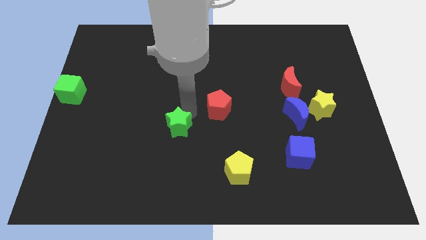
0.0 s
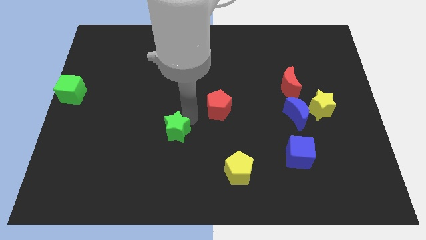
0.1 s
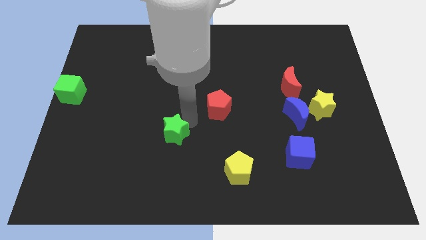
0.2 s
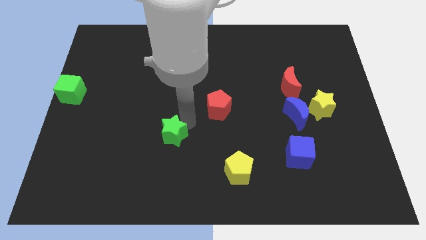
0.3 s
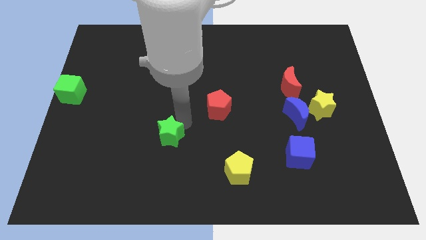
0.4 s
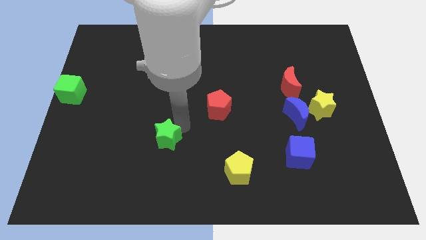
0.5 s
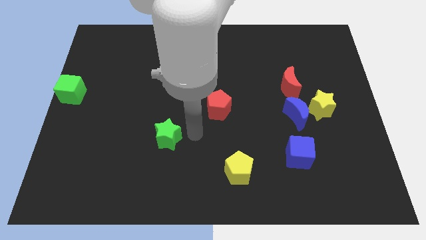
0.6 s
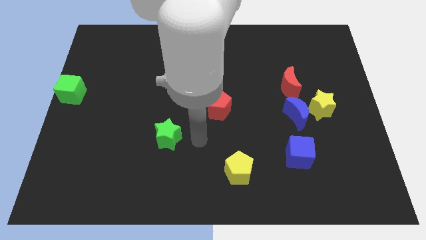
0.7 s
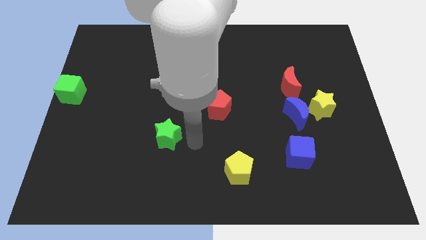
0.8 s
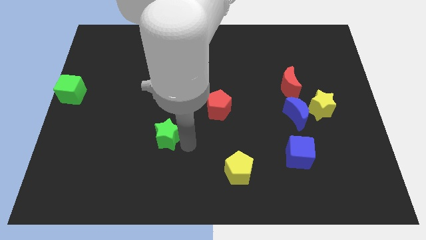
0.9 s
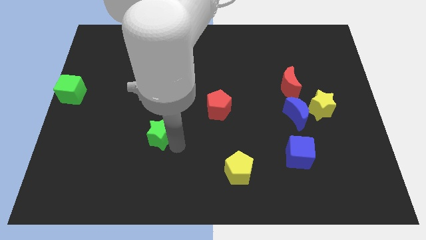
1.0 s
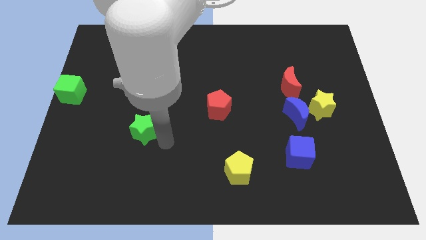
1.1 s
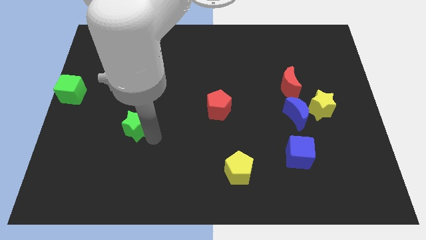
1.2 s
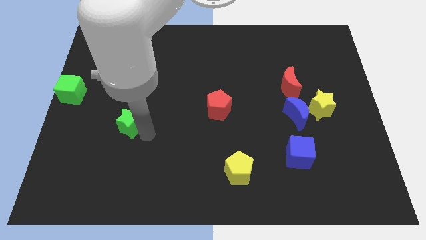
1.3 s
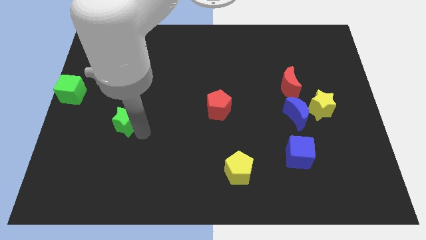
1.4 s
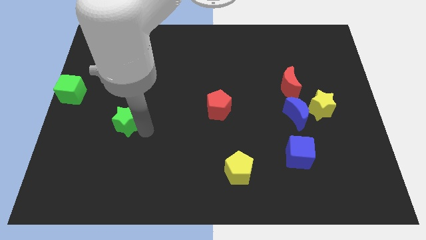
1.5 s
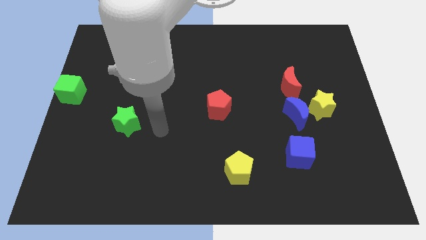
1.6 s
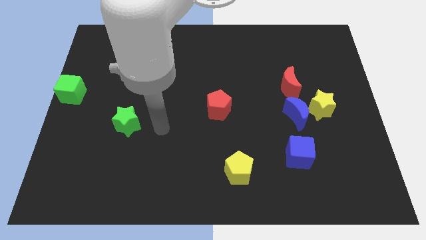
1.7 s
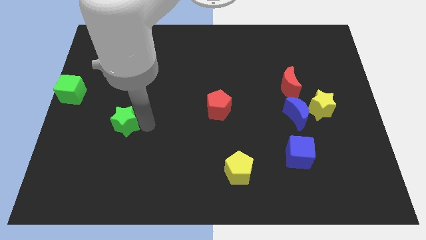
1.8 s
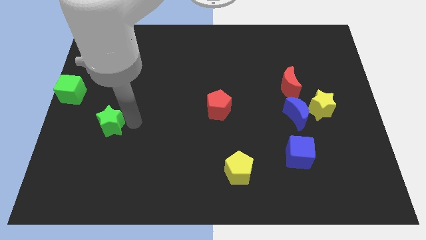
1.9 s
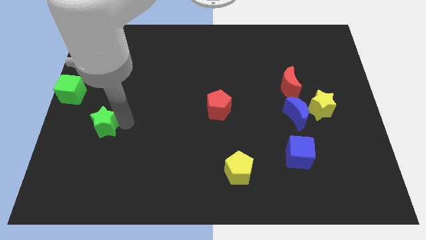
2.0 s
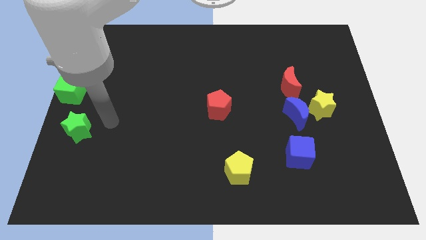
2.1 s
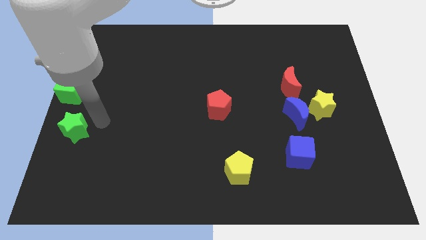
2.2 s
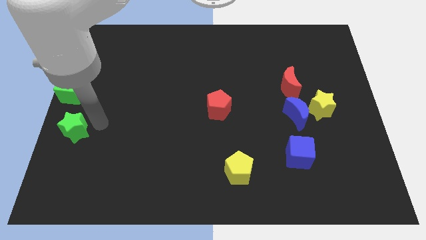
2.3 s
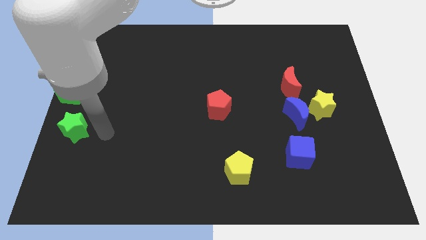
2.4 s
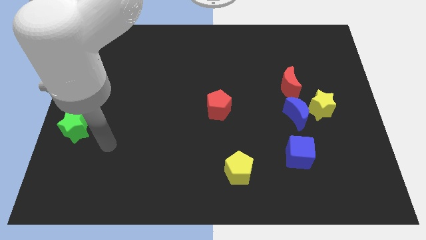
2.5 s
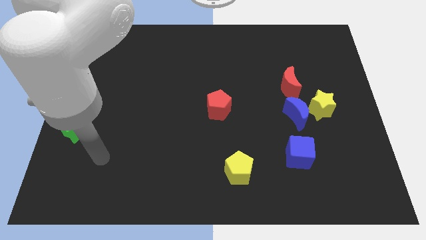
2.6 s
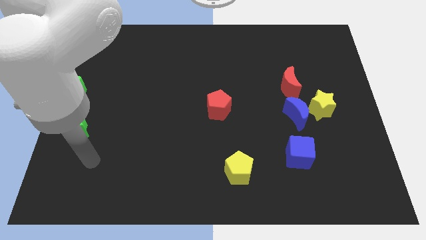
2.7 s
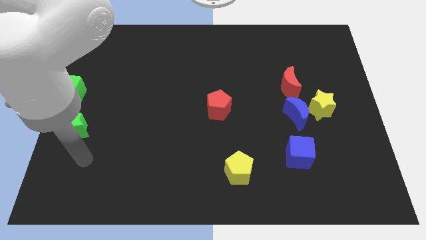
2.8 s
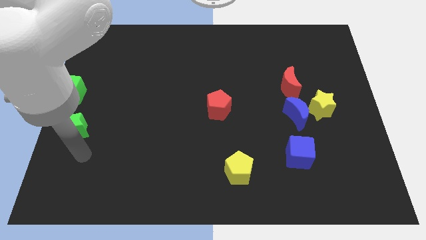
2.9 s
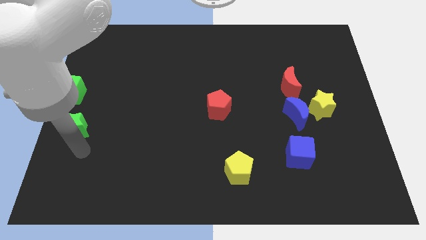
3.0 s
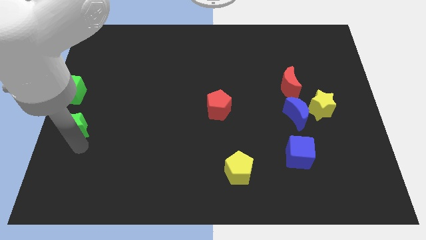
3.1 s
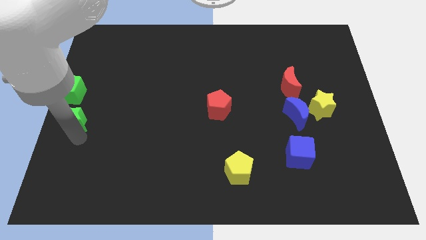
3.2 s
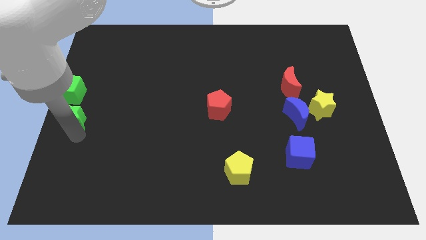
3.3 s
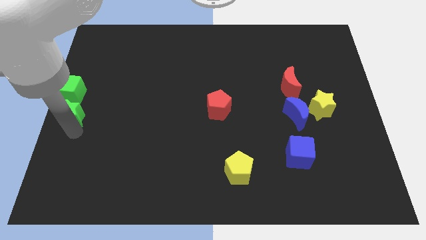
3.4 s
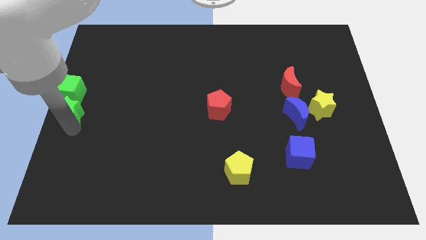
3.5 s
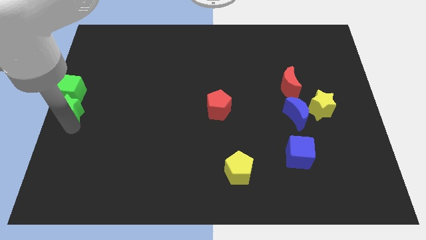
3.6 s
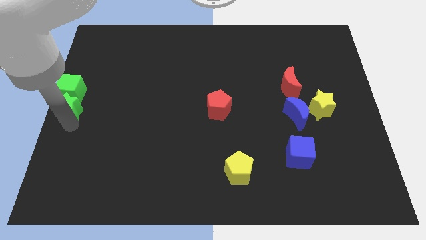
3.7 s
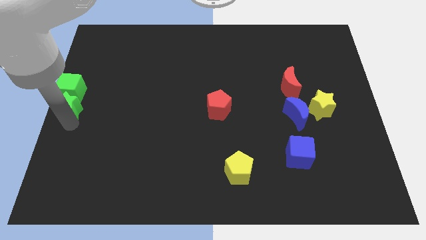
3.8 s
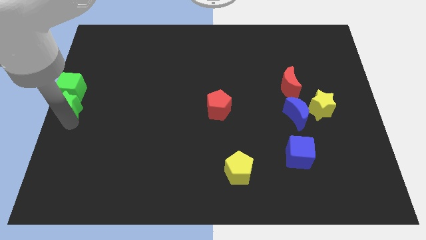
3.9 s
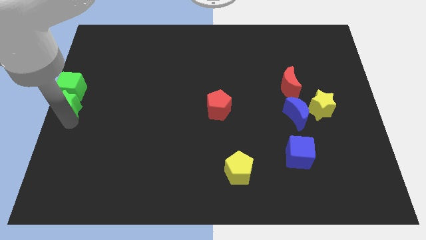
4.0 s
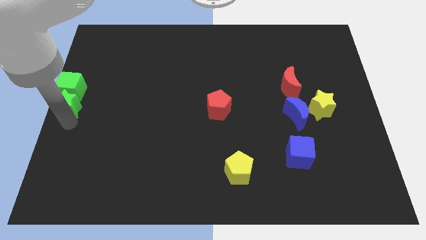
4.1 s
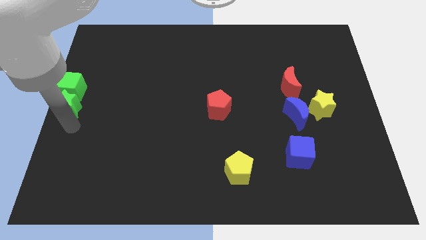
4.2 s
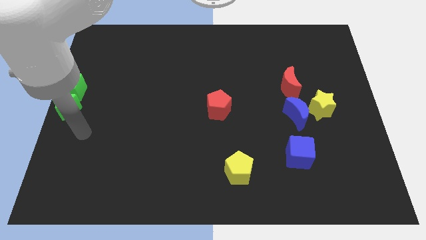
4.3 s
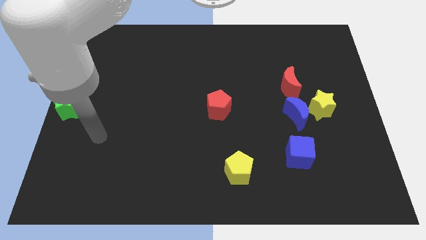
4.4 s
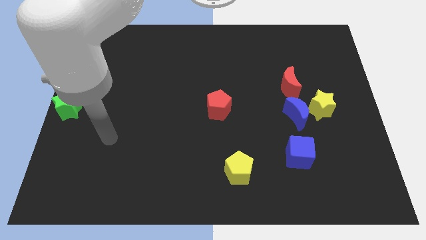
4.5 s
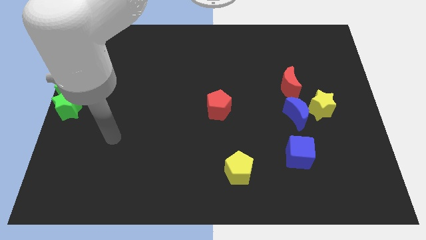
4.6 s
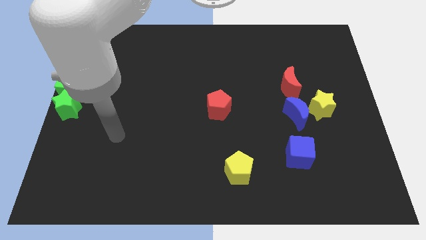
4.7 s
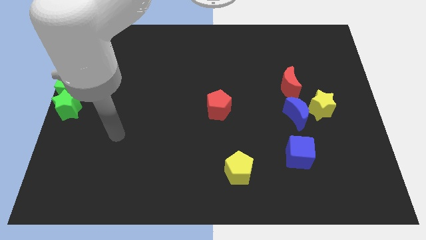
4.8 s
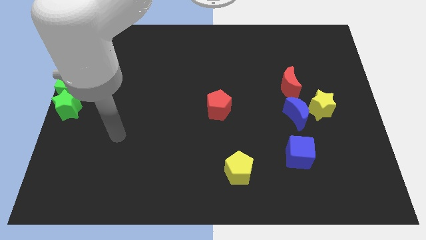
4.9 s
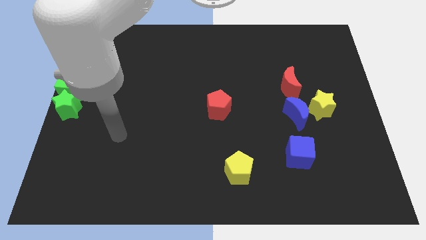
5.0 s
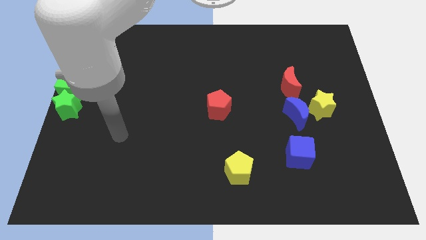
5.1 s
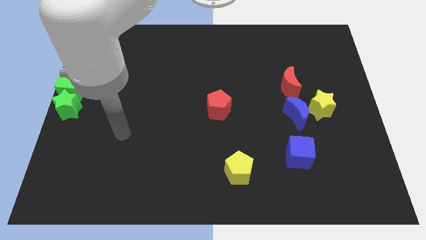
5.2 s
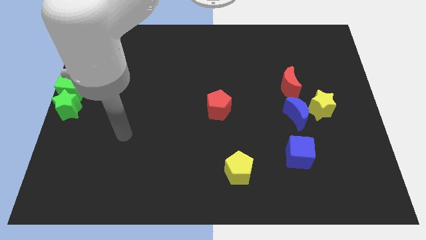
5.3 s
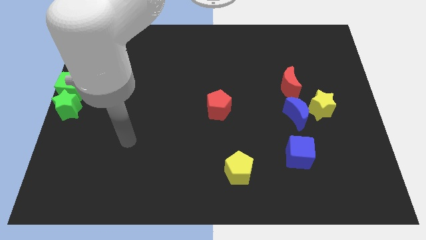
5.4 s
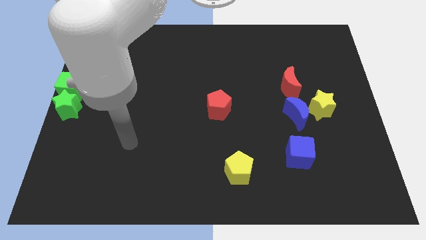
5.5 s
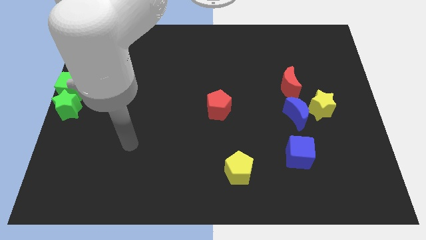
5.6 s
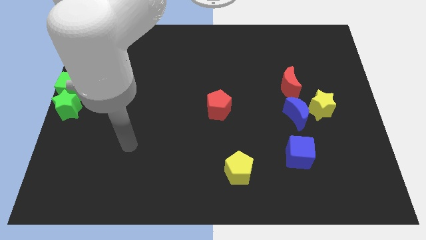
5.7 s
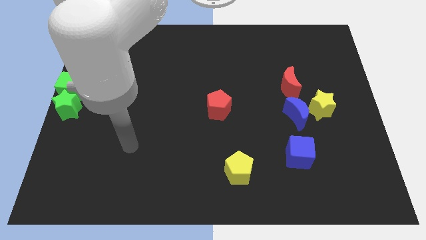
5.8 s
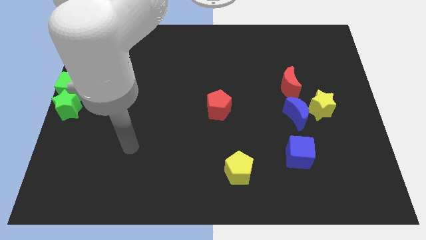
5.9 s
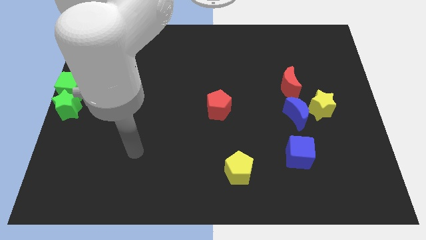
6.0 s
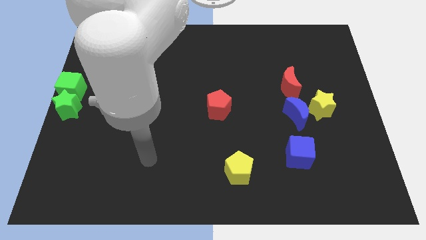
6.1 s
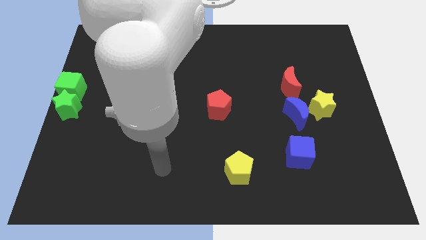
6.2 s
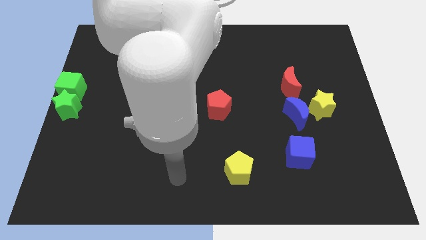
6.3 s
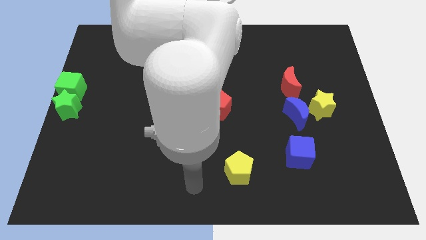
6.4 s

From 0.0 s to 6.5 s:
move the green star to the bottom of the green cube

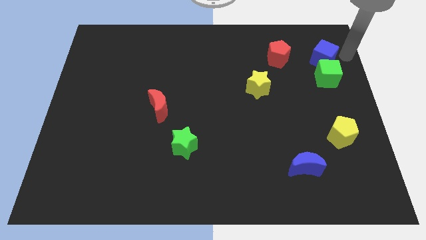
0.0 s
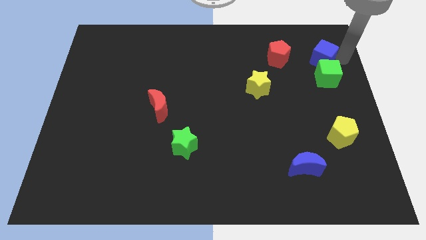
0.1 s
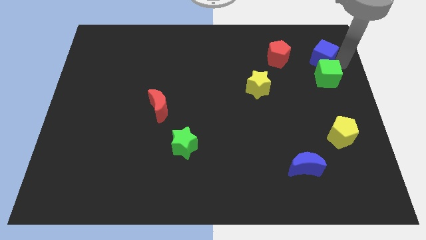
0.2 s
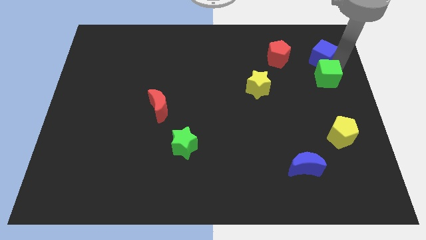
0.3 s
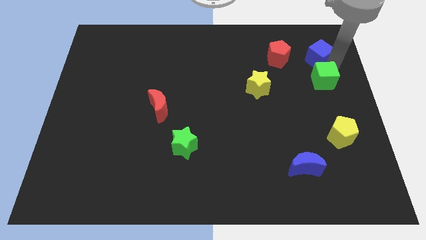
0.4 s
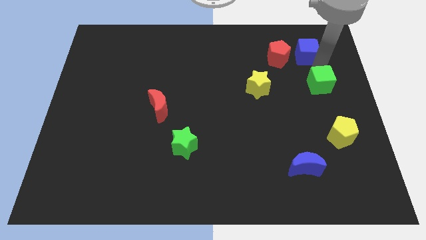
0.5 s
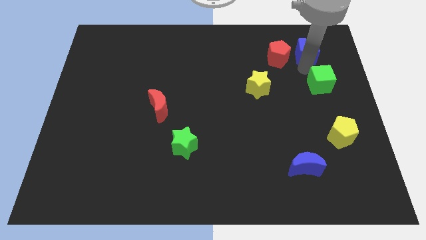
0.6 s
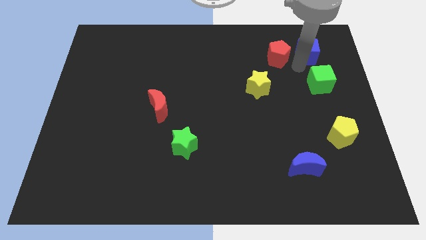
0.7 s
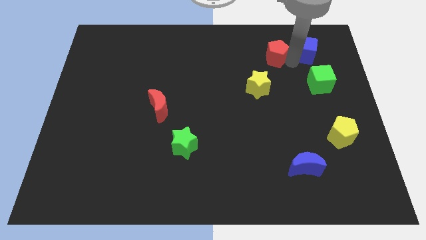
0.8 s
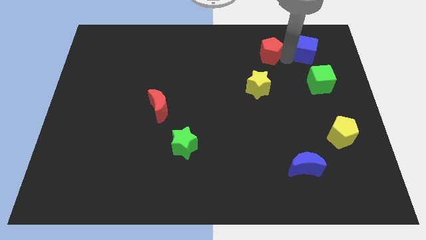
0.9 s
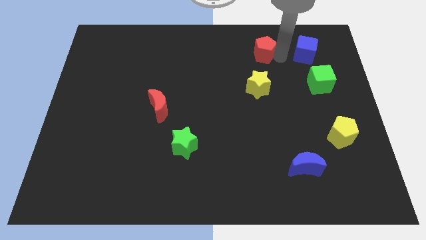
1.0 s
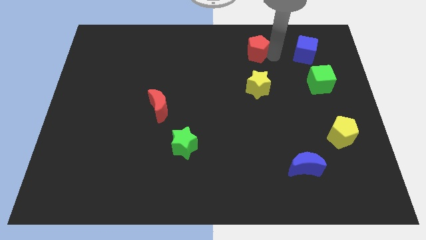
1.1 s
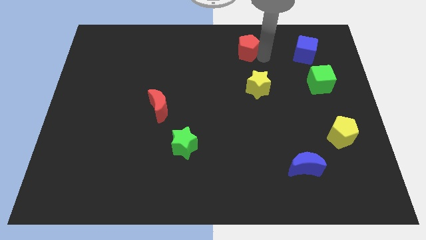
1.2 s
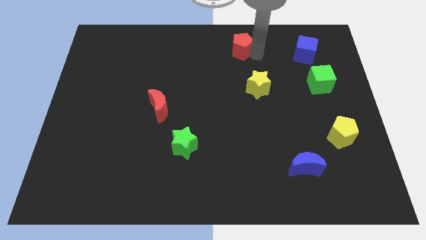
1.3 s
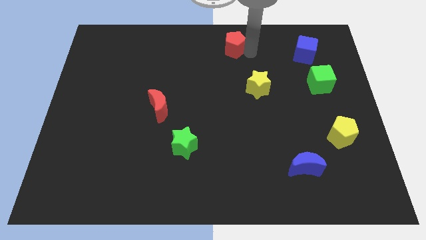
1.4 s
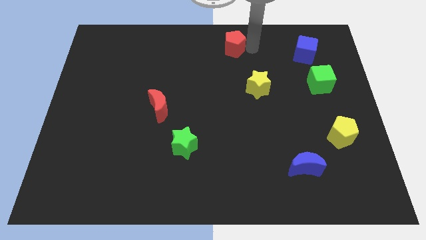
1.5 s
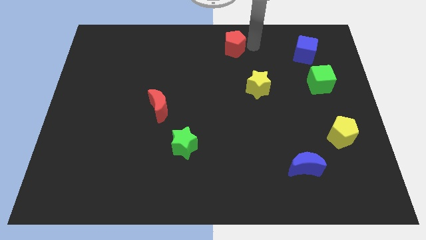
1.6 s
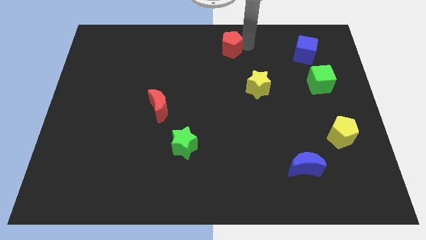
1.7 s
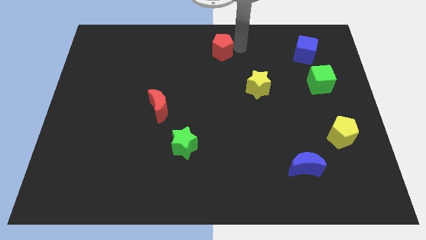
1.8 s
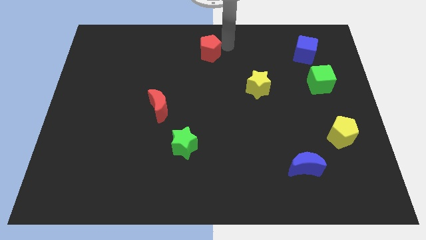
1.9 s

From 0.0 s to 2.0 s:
move the red pentagon towards the left side

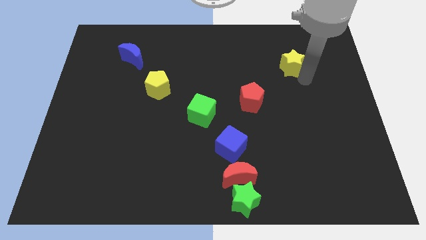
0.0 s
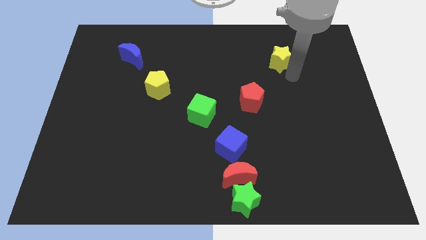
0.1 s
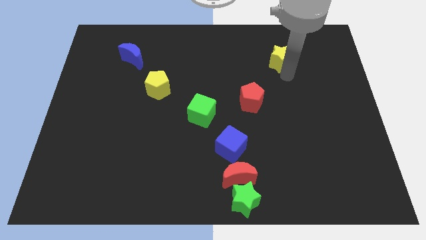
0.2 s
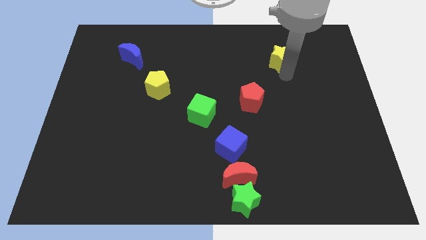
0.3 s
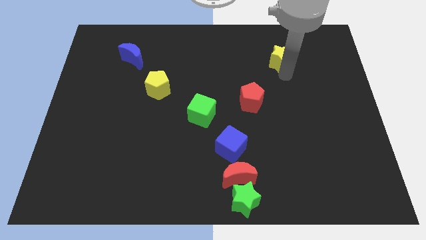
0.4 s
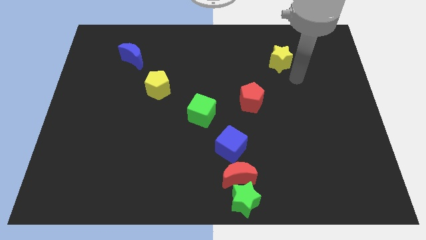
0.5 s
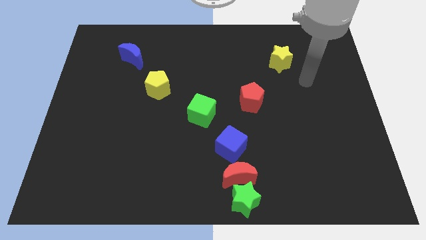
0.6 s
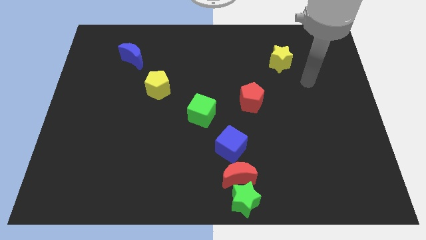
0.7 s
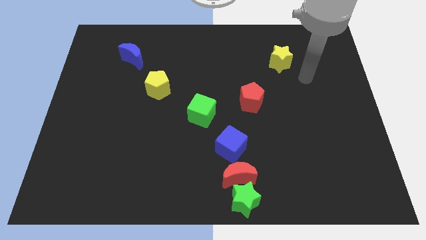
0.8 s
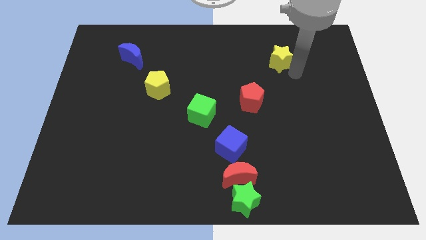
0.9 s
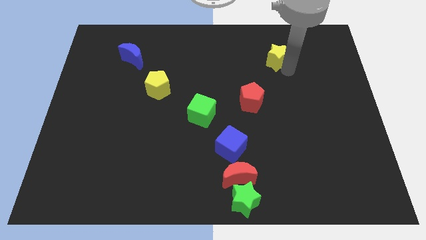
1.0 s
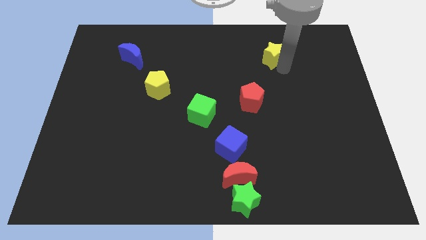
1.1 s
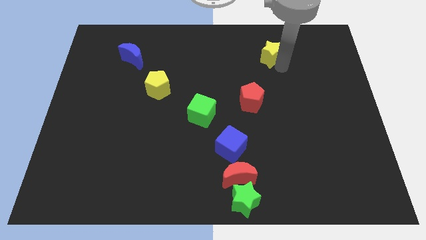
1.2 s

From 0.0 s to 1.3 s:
push the yellow star towards the top right of the board
